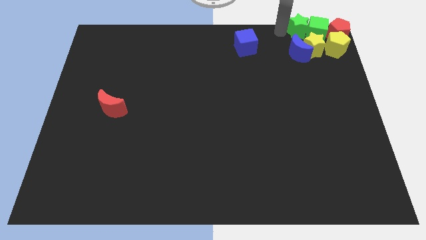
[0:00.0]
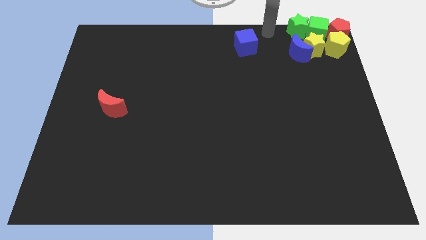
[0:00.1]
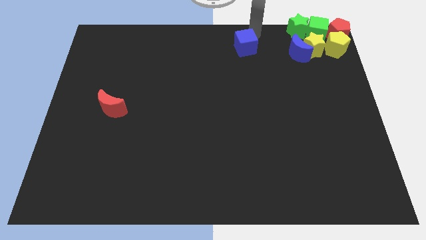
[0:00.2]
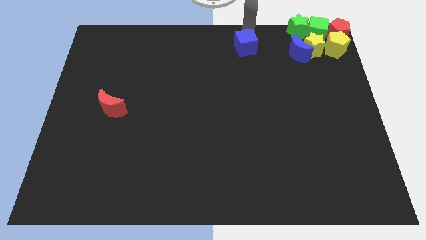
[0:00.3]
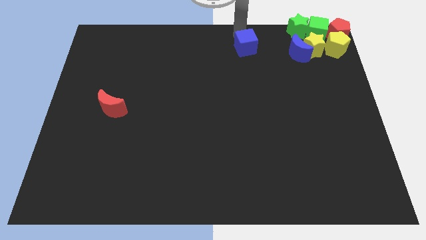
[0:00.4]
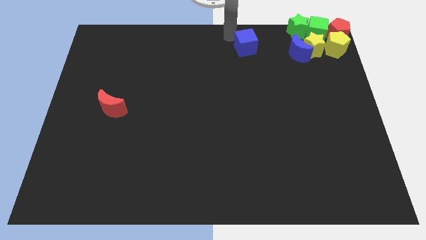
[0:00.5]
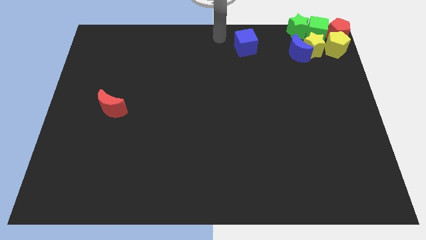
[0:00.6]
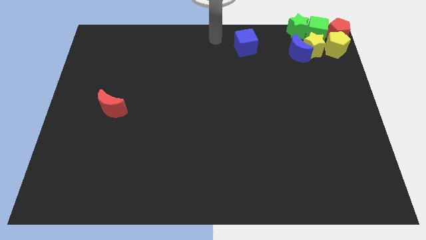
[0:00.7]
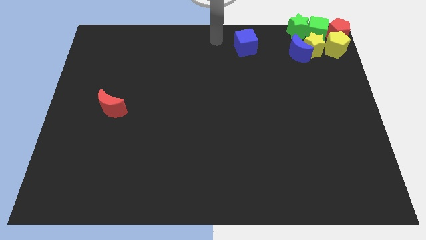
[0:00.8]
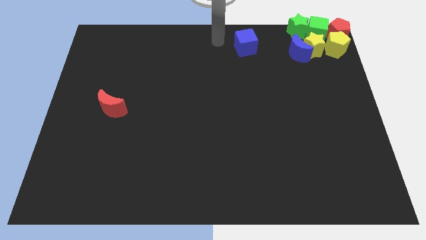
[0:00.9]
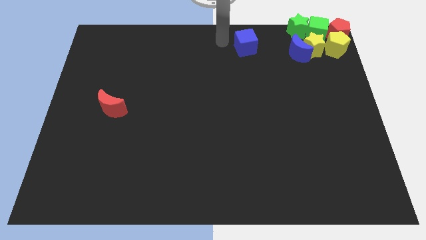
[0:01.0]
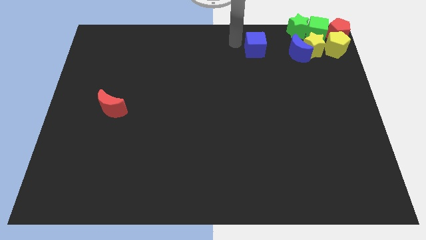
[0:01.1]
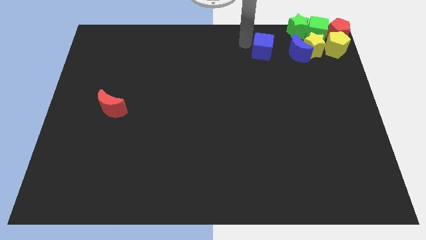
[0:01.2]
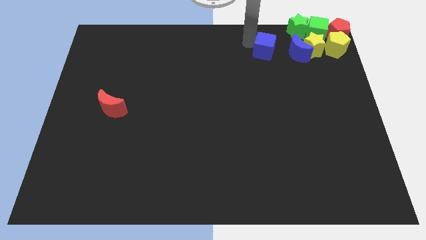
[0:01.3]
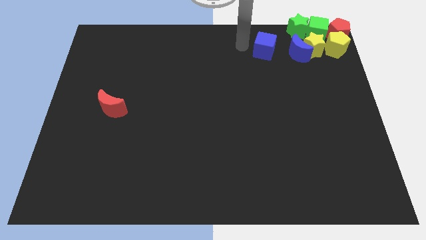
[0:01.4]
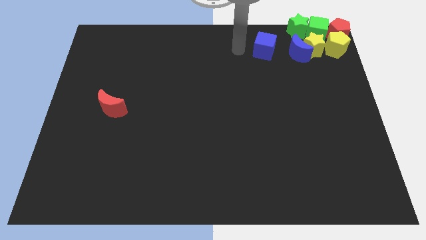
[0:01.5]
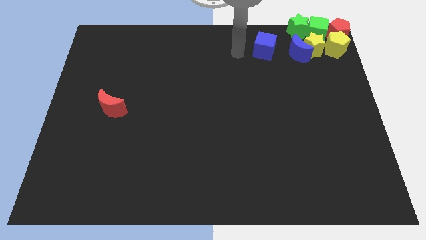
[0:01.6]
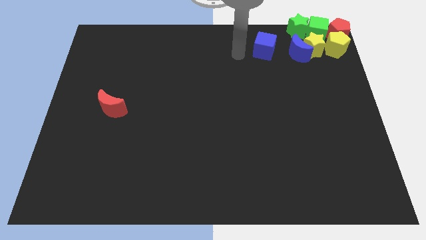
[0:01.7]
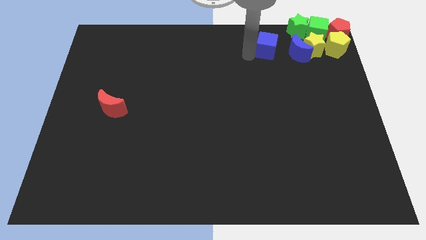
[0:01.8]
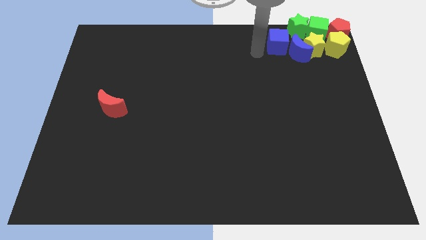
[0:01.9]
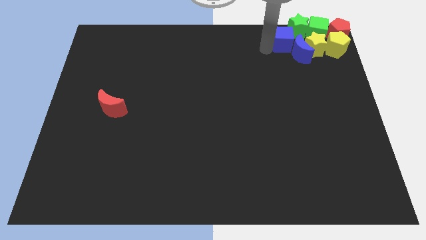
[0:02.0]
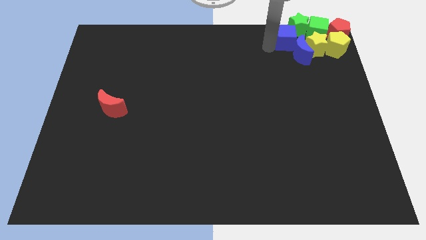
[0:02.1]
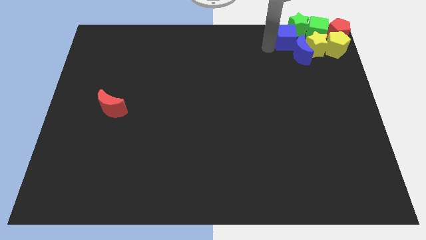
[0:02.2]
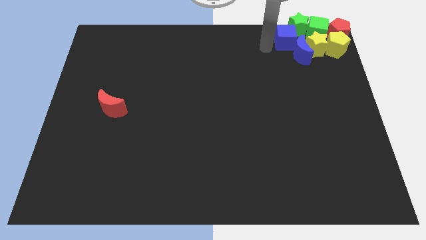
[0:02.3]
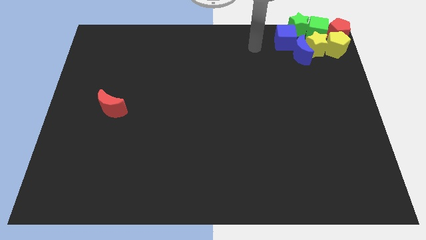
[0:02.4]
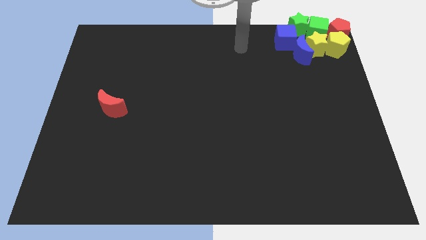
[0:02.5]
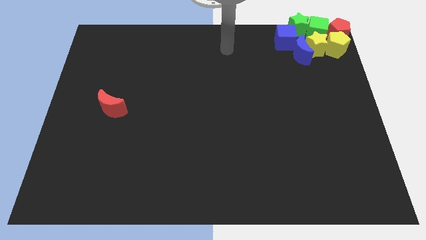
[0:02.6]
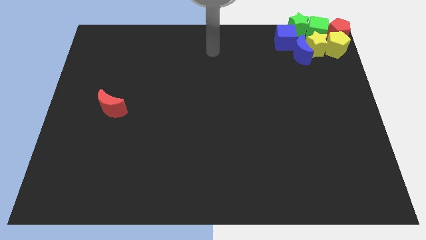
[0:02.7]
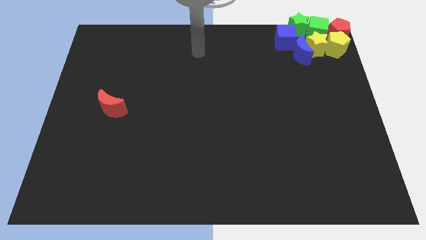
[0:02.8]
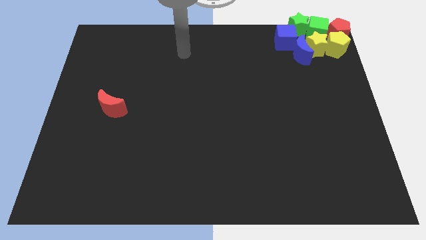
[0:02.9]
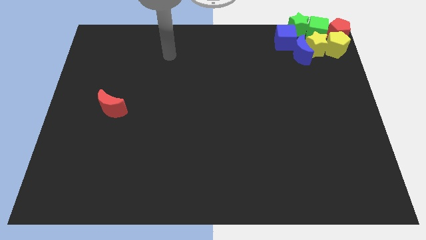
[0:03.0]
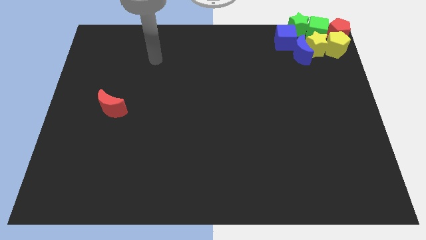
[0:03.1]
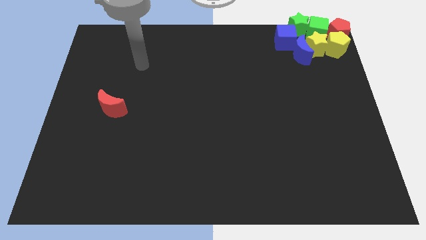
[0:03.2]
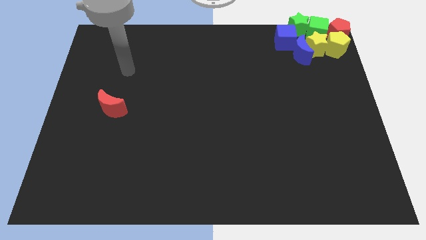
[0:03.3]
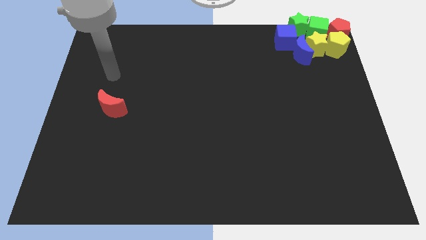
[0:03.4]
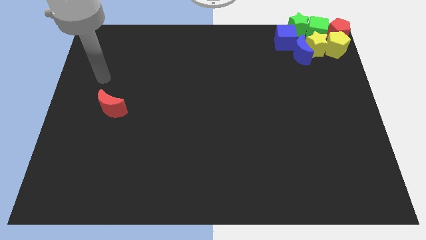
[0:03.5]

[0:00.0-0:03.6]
move the blue cube left beside the green star and blue moon

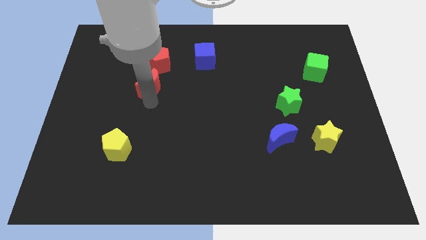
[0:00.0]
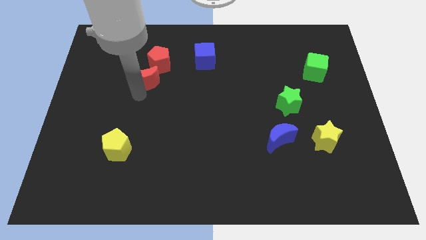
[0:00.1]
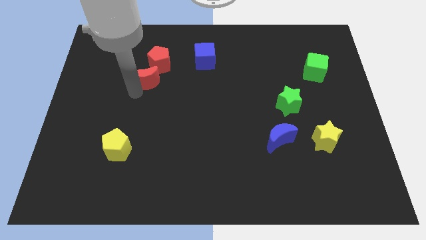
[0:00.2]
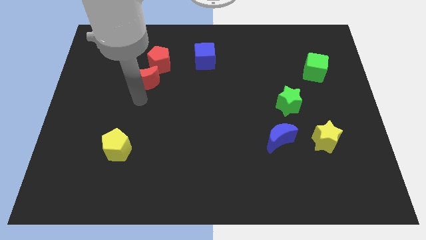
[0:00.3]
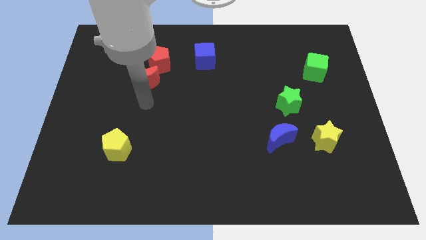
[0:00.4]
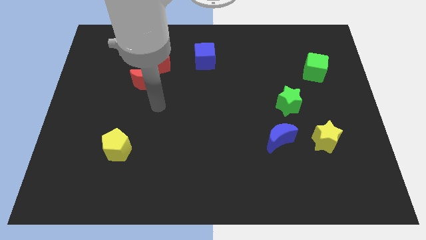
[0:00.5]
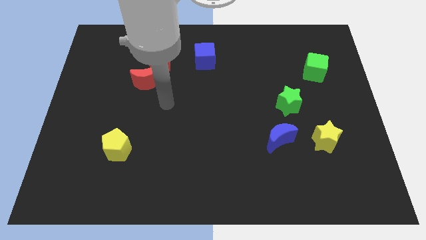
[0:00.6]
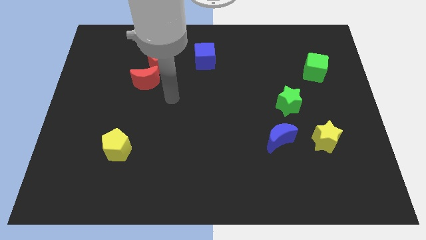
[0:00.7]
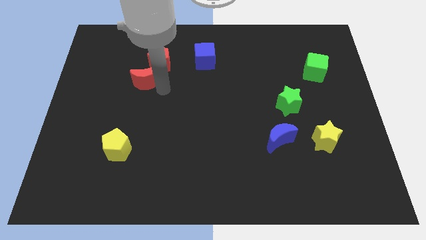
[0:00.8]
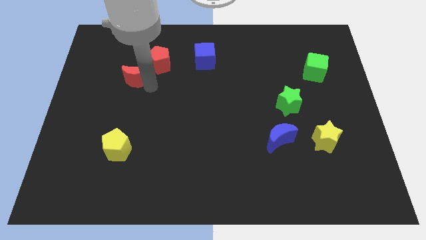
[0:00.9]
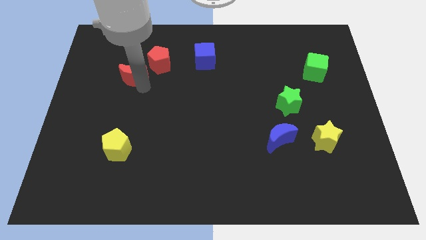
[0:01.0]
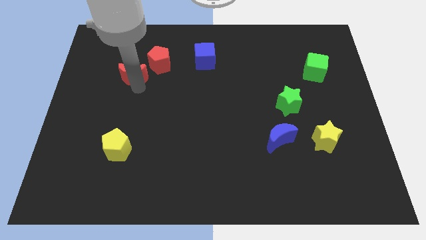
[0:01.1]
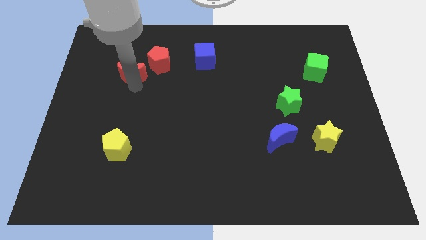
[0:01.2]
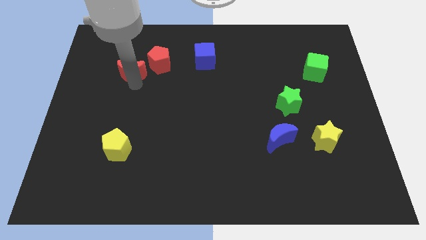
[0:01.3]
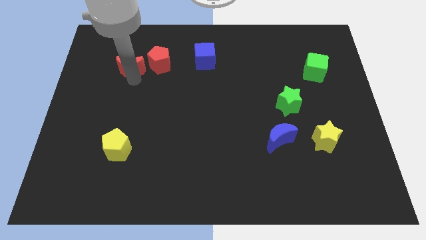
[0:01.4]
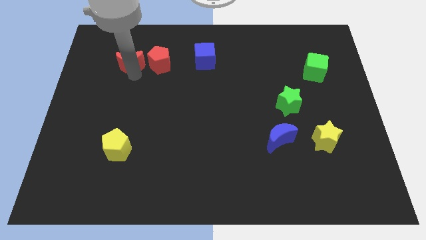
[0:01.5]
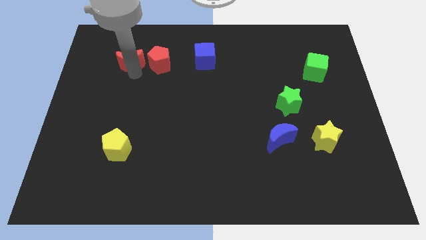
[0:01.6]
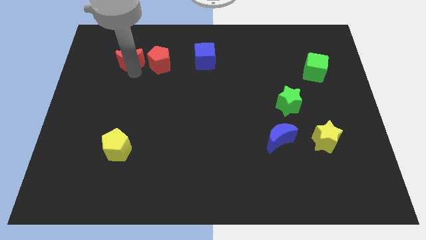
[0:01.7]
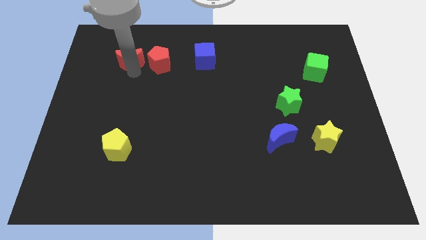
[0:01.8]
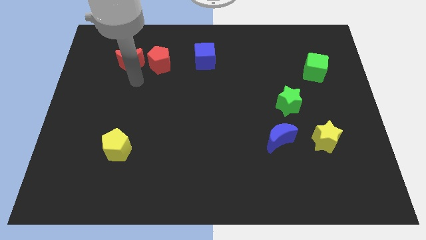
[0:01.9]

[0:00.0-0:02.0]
push the red crescent to the left of the red pentagon

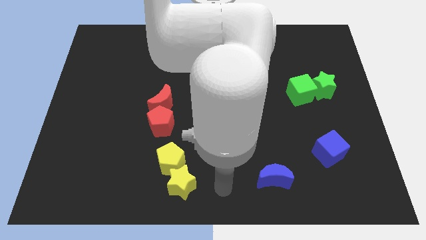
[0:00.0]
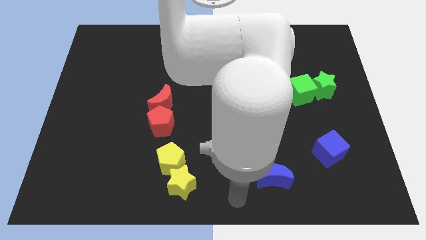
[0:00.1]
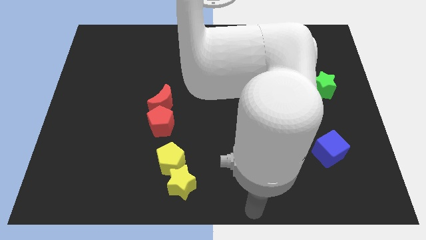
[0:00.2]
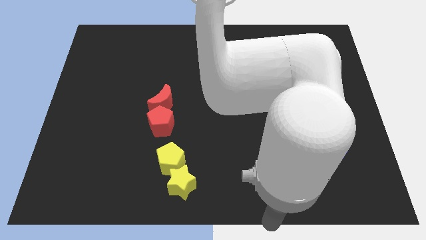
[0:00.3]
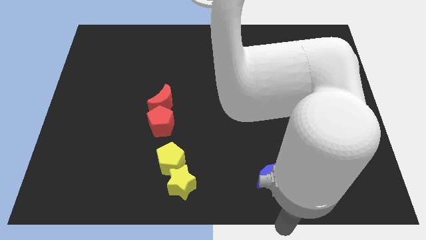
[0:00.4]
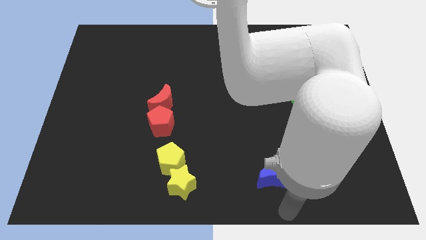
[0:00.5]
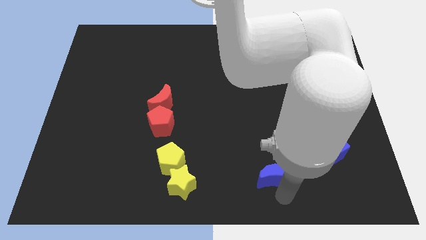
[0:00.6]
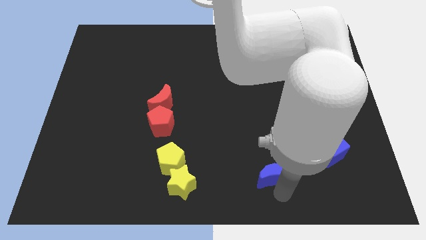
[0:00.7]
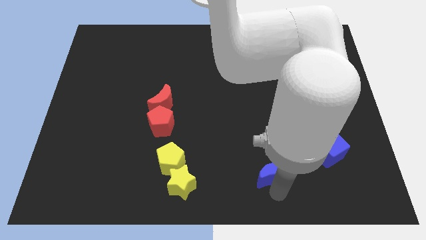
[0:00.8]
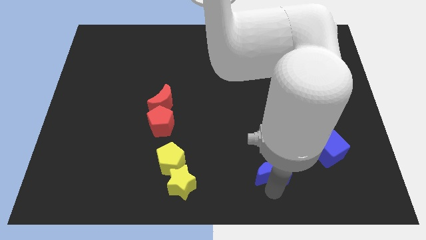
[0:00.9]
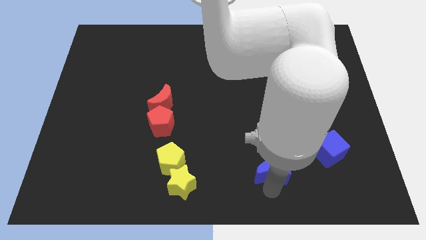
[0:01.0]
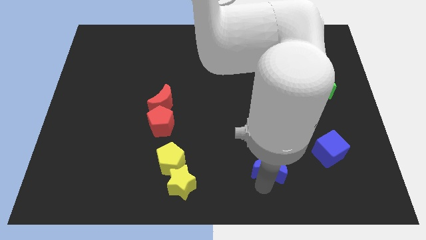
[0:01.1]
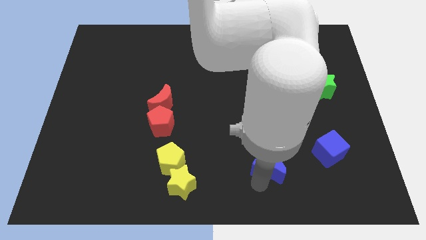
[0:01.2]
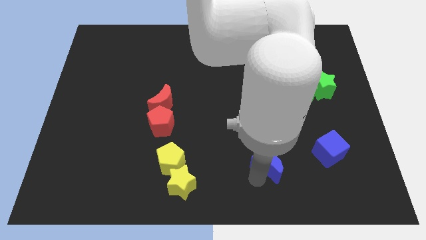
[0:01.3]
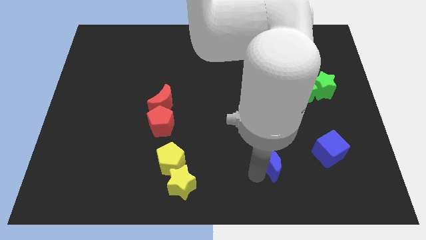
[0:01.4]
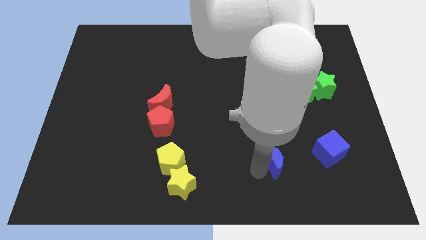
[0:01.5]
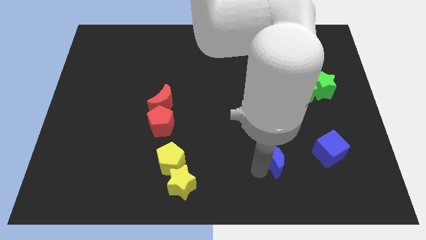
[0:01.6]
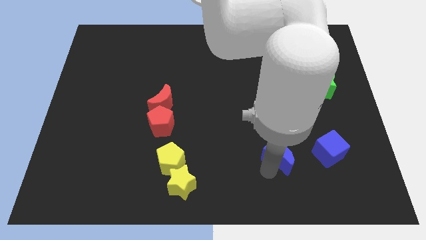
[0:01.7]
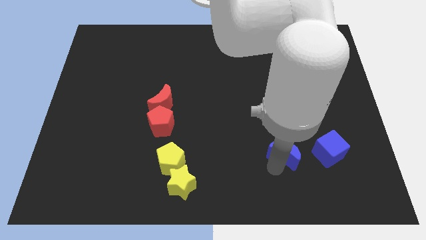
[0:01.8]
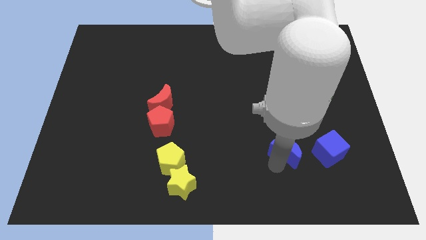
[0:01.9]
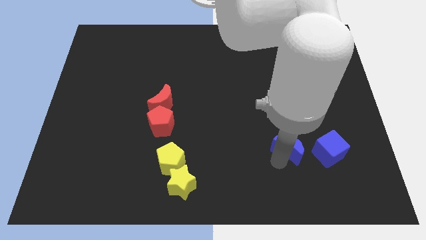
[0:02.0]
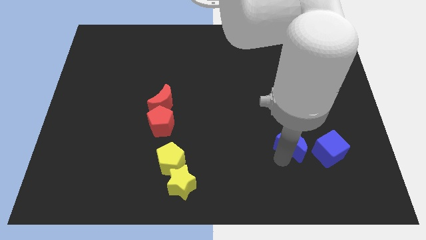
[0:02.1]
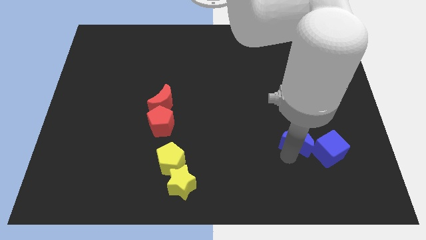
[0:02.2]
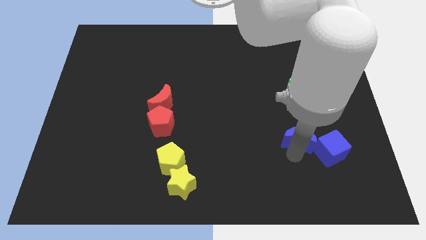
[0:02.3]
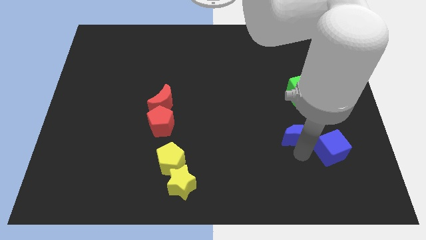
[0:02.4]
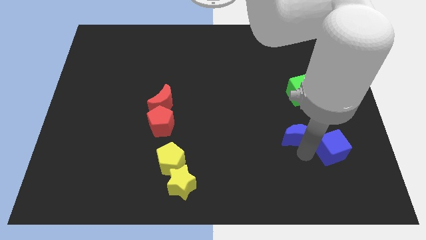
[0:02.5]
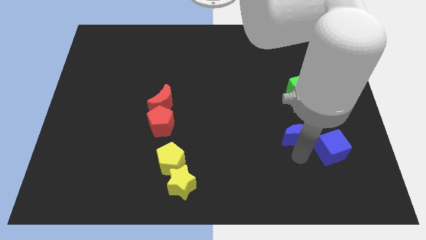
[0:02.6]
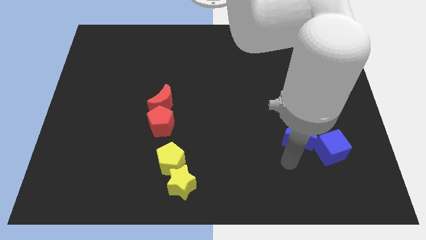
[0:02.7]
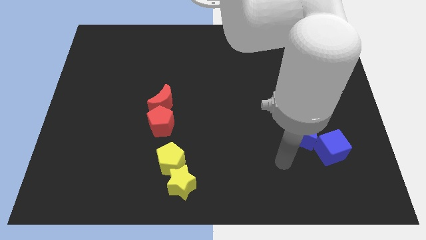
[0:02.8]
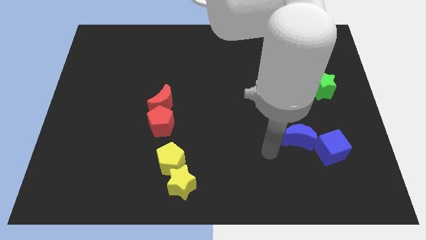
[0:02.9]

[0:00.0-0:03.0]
push the blue crescent towards the top left corner of the blue cube

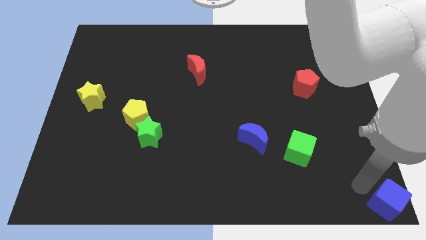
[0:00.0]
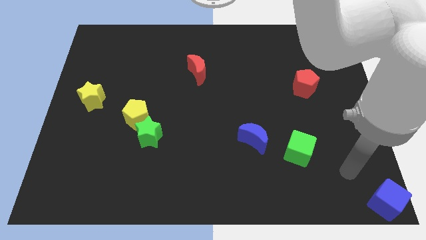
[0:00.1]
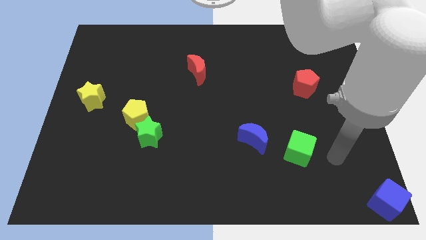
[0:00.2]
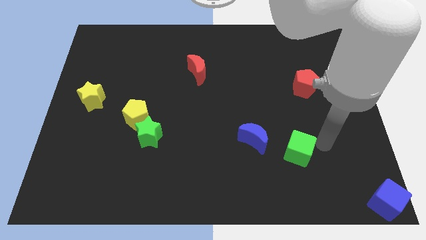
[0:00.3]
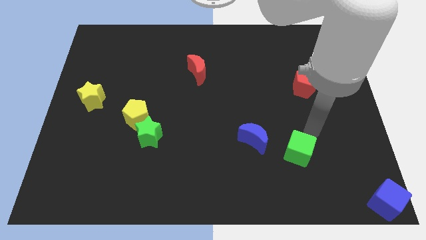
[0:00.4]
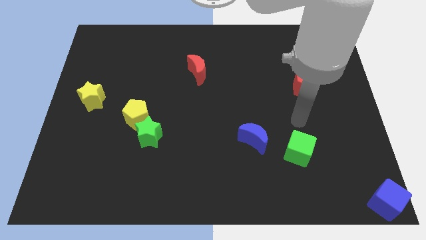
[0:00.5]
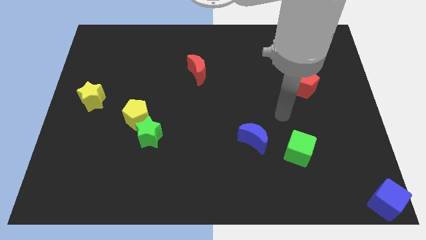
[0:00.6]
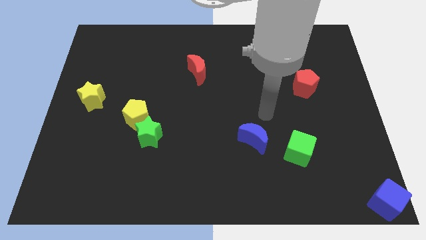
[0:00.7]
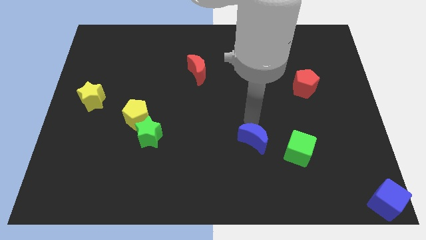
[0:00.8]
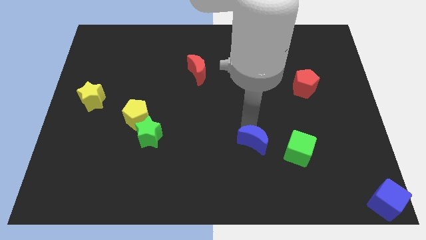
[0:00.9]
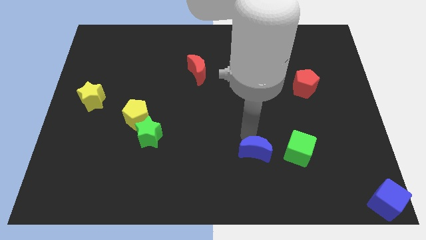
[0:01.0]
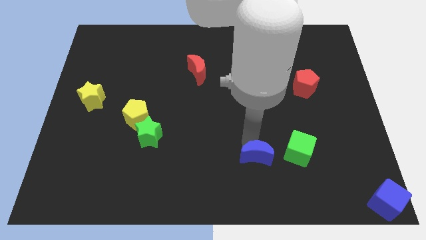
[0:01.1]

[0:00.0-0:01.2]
place the blue crescent to the left side of the green cube
